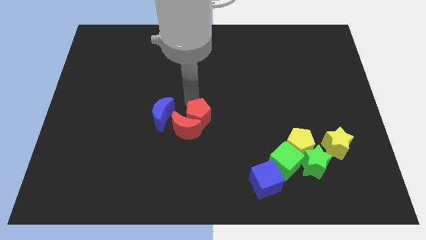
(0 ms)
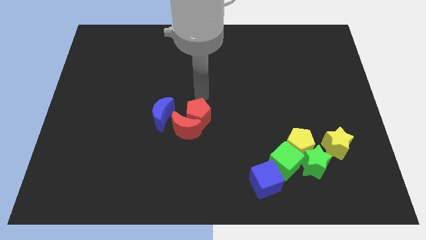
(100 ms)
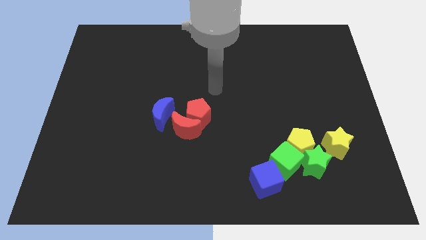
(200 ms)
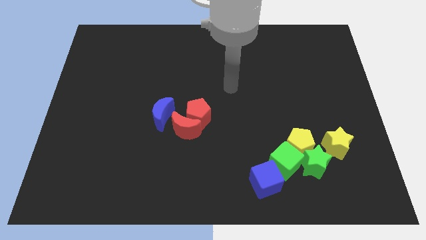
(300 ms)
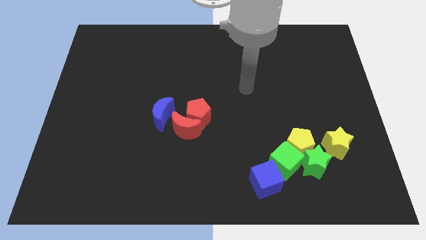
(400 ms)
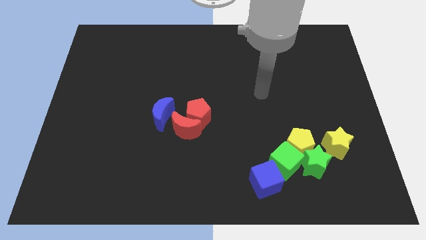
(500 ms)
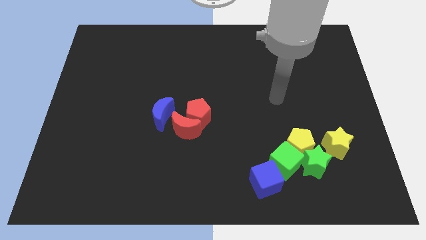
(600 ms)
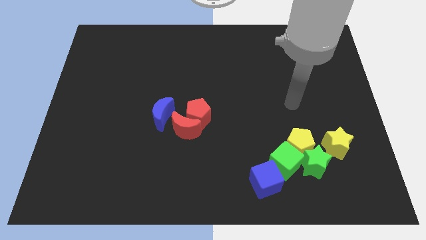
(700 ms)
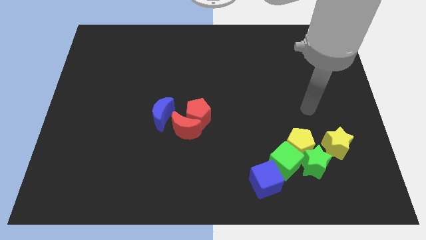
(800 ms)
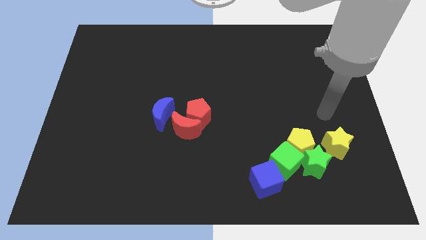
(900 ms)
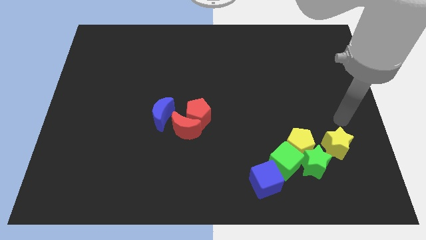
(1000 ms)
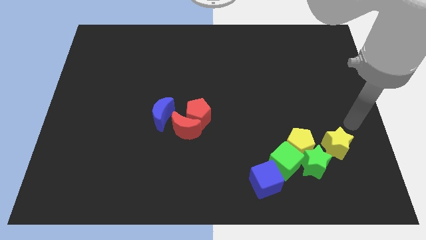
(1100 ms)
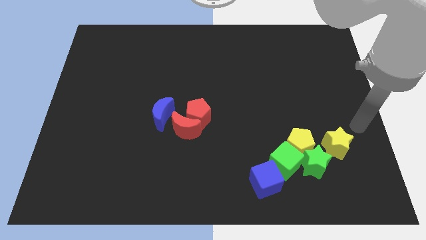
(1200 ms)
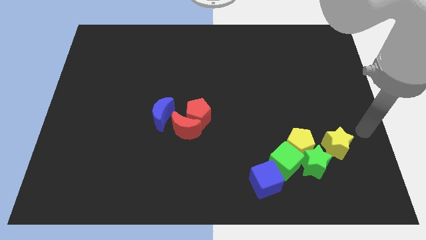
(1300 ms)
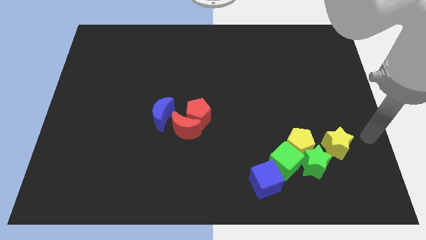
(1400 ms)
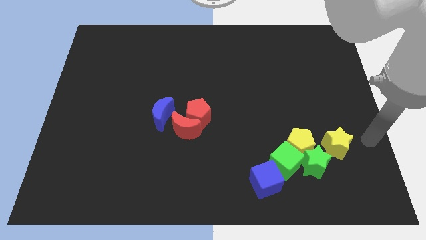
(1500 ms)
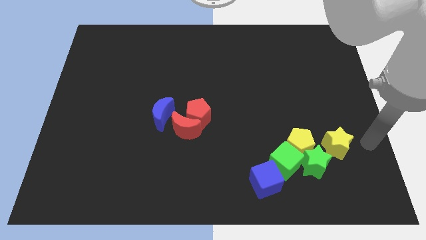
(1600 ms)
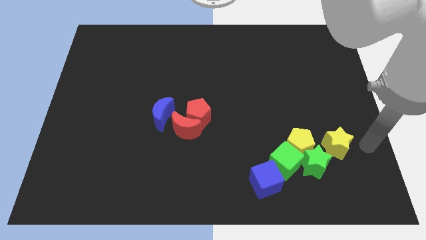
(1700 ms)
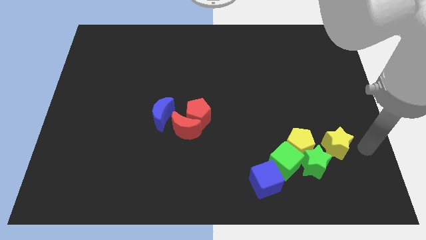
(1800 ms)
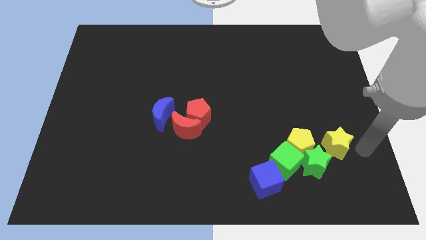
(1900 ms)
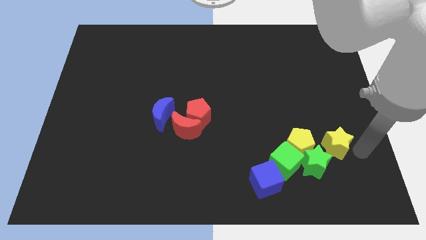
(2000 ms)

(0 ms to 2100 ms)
point your arm at the right side of the yellow star

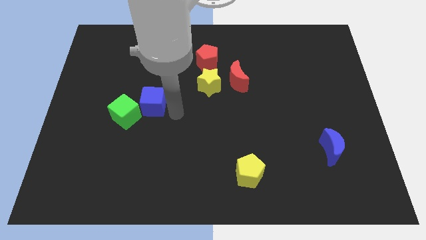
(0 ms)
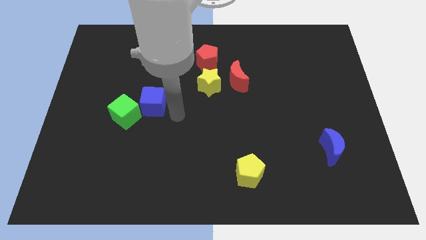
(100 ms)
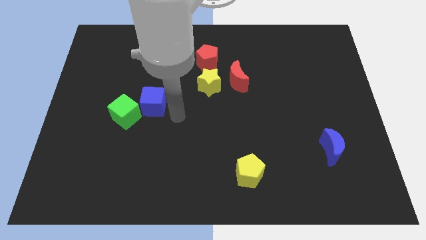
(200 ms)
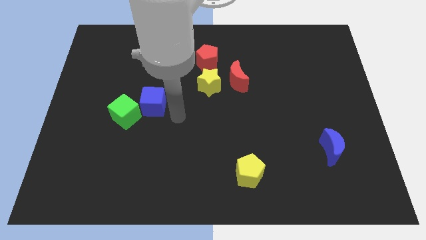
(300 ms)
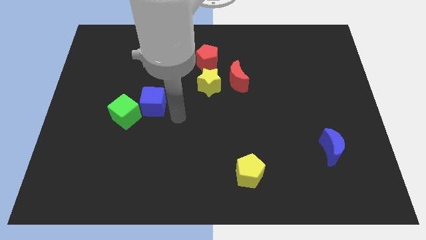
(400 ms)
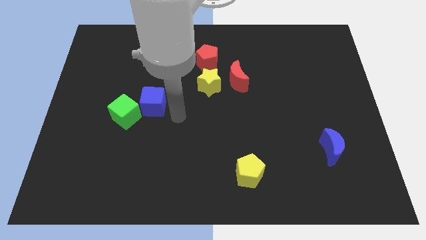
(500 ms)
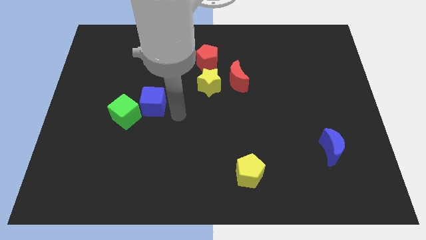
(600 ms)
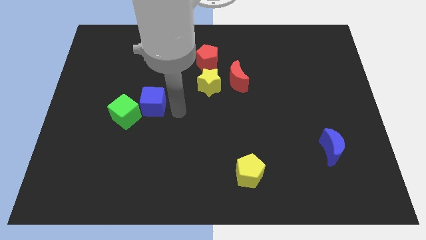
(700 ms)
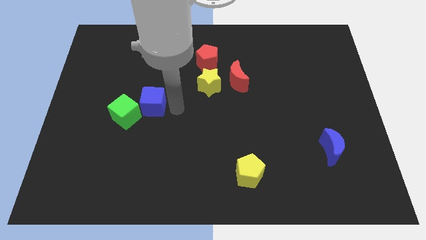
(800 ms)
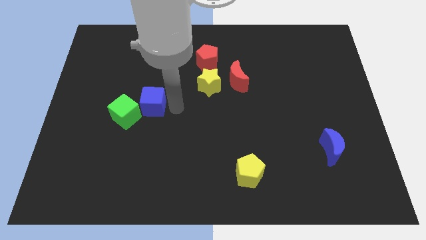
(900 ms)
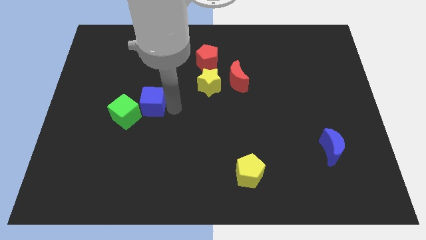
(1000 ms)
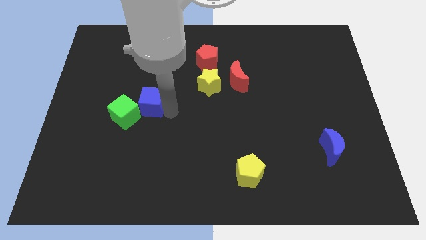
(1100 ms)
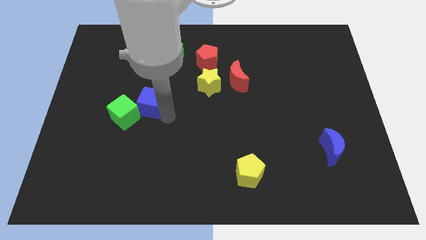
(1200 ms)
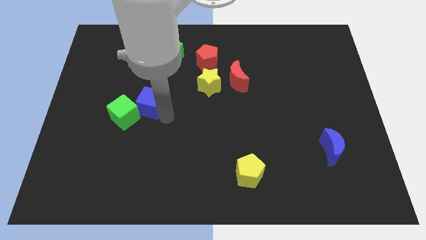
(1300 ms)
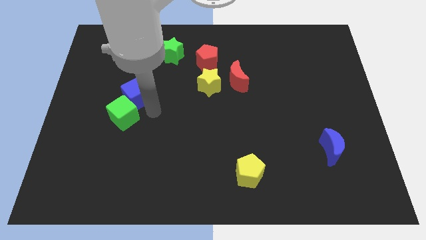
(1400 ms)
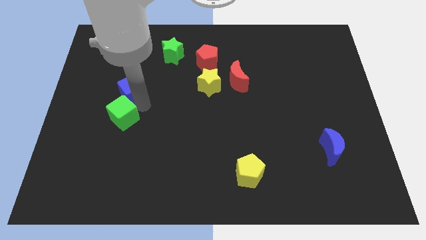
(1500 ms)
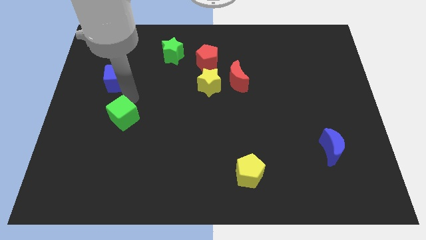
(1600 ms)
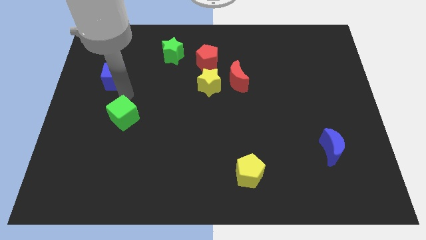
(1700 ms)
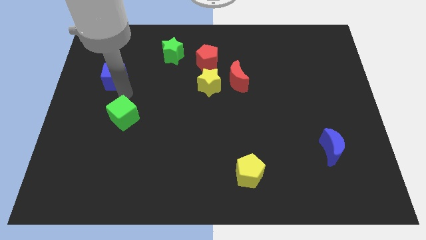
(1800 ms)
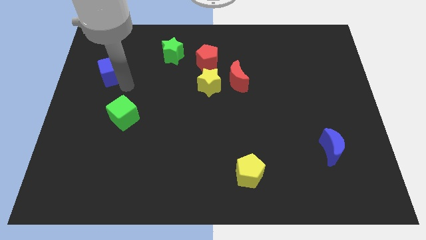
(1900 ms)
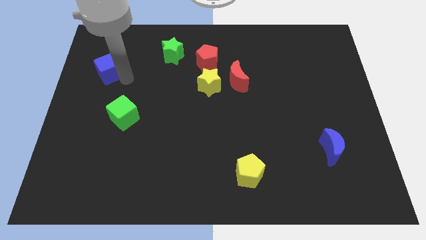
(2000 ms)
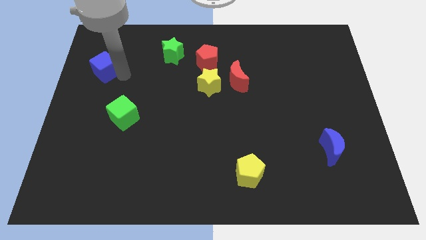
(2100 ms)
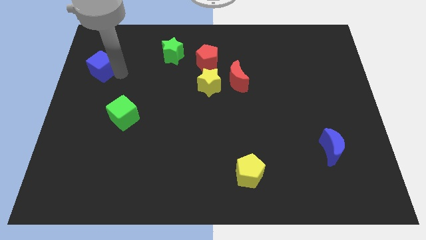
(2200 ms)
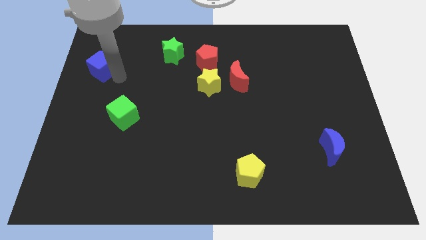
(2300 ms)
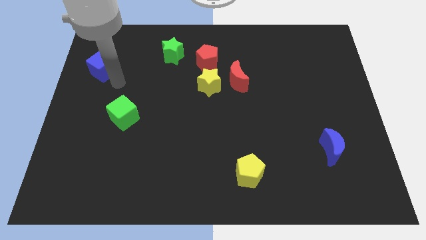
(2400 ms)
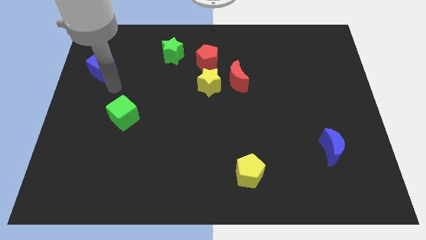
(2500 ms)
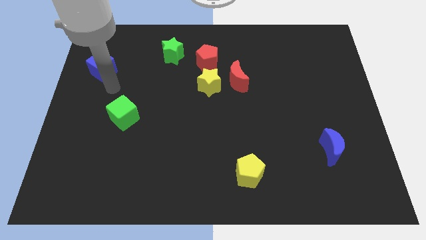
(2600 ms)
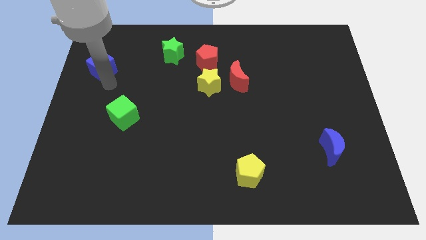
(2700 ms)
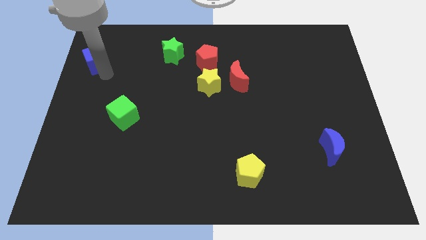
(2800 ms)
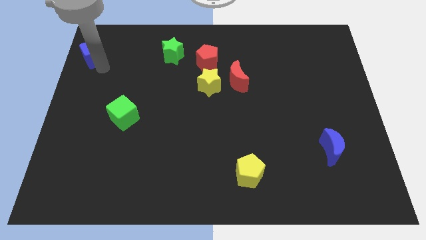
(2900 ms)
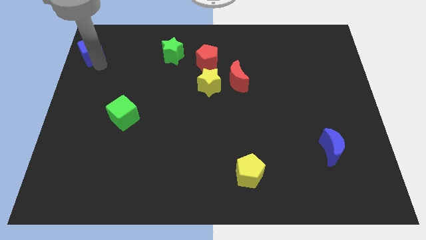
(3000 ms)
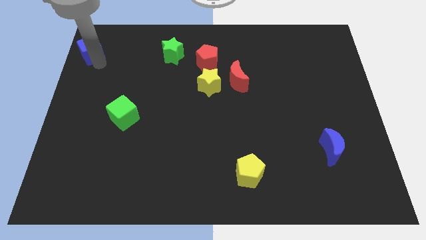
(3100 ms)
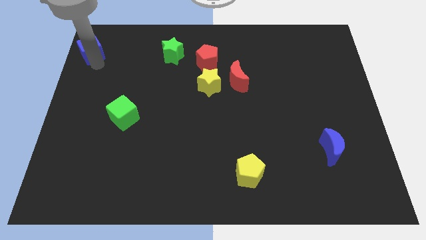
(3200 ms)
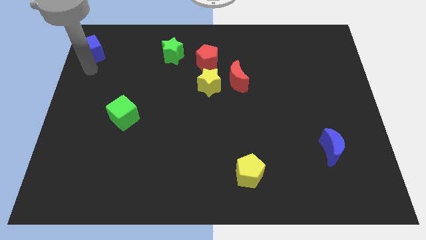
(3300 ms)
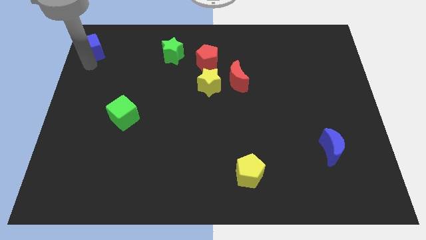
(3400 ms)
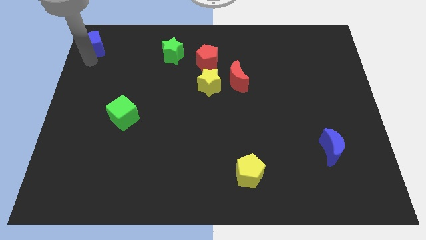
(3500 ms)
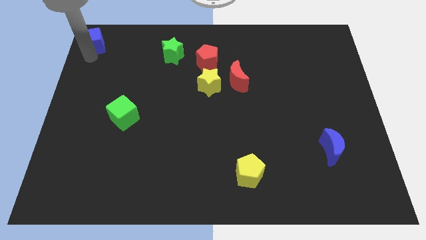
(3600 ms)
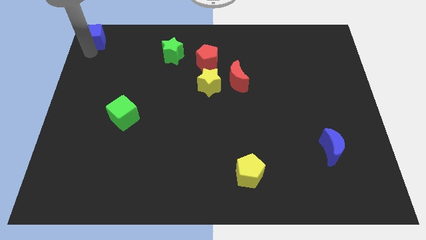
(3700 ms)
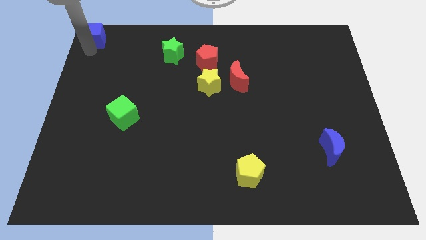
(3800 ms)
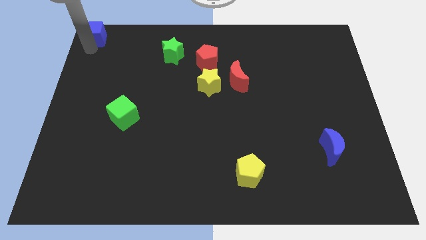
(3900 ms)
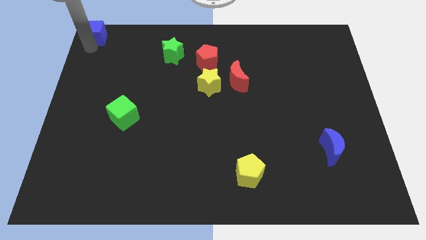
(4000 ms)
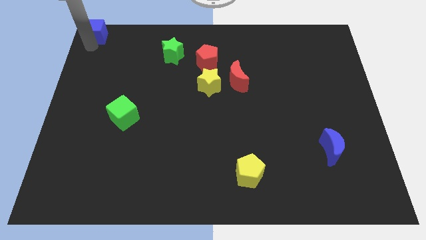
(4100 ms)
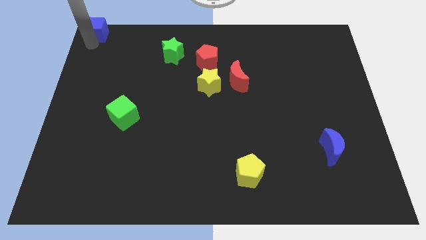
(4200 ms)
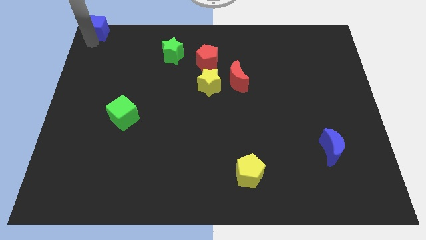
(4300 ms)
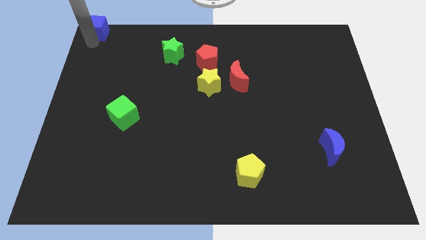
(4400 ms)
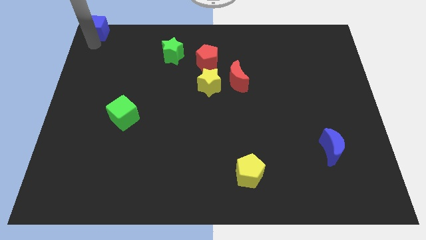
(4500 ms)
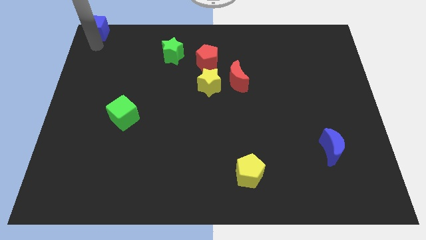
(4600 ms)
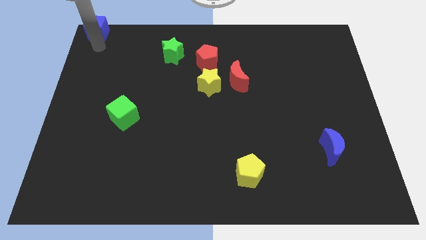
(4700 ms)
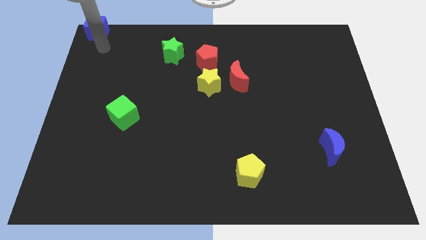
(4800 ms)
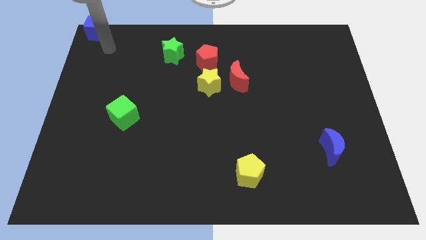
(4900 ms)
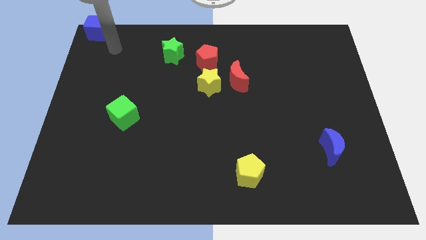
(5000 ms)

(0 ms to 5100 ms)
push the blue cube on the top left of the board

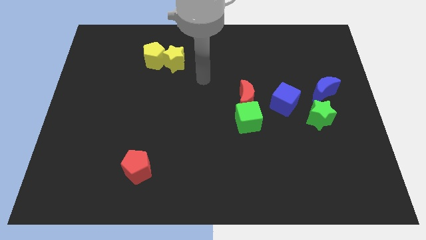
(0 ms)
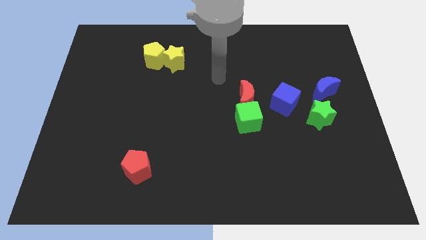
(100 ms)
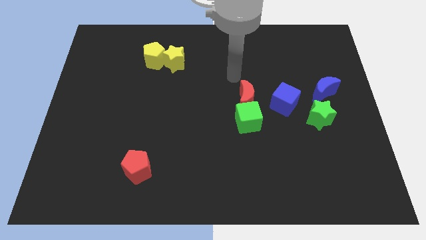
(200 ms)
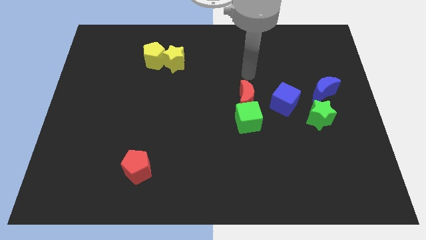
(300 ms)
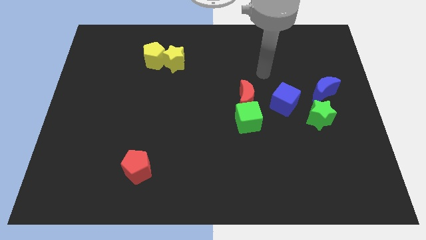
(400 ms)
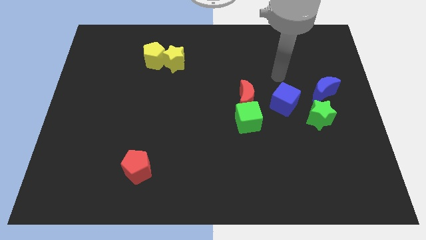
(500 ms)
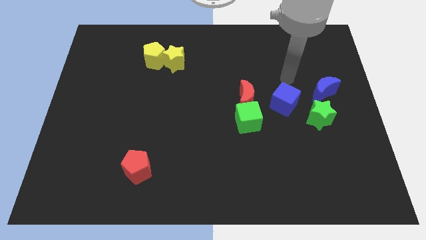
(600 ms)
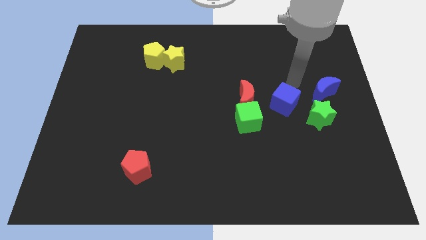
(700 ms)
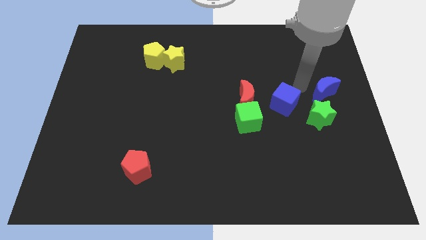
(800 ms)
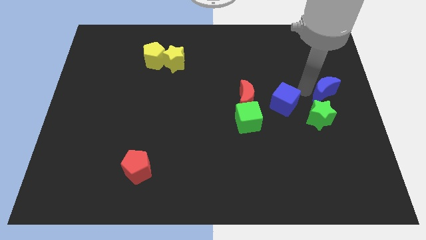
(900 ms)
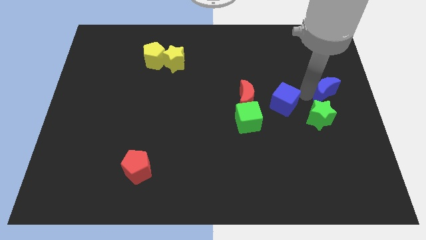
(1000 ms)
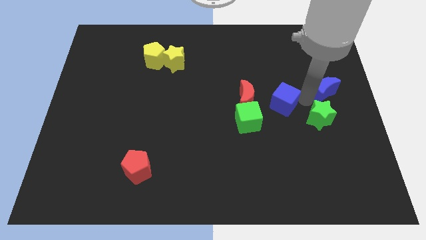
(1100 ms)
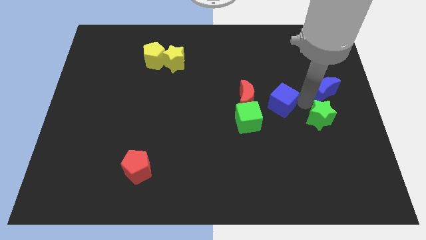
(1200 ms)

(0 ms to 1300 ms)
move your arm to the top of blue crescent

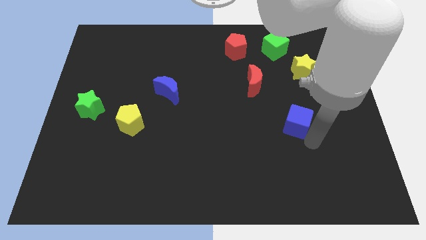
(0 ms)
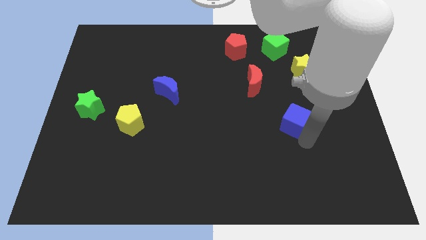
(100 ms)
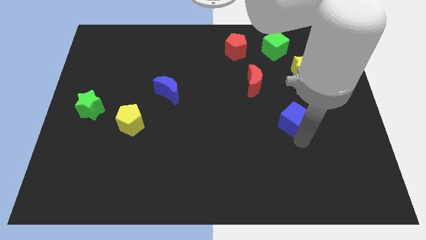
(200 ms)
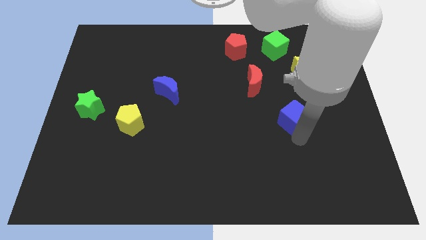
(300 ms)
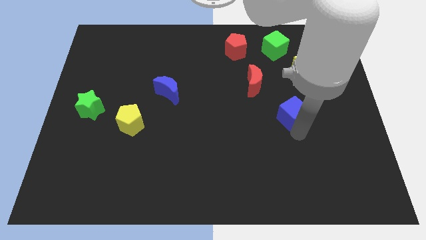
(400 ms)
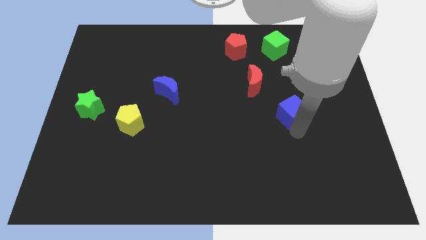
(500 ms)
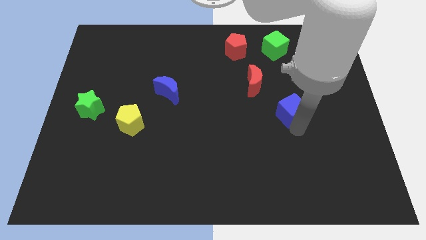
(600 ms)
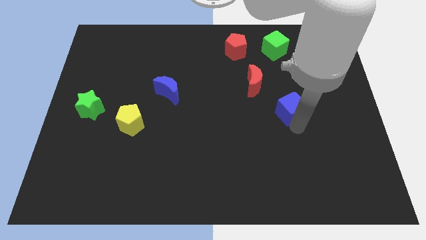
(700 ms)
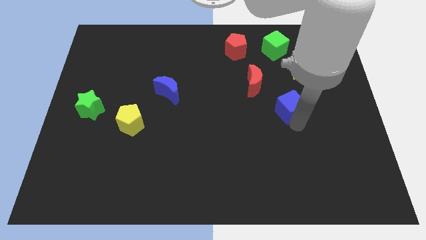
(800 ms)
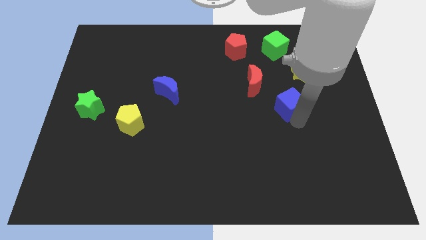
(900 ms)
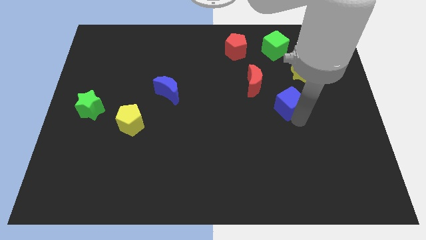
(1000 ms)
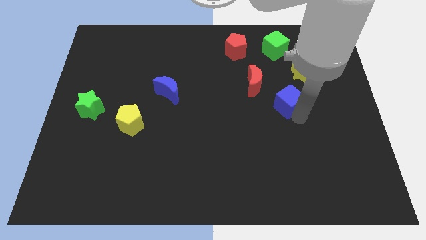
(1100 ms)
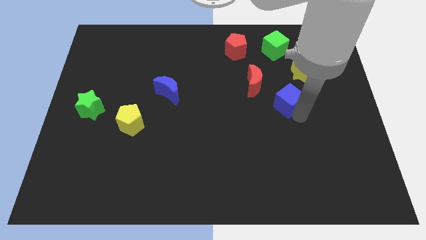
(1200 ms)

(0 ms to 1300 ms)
move the blue cube diagonally to the red moon
